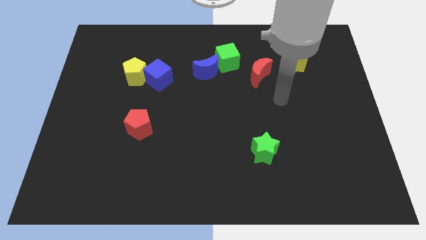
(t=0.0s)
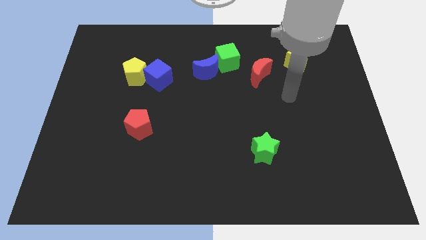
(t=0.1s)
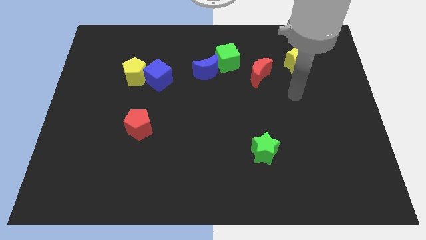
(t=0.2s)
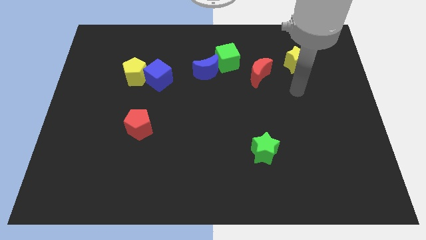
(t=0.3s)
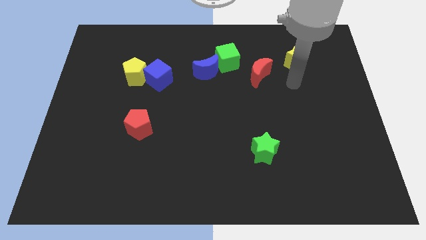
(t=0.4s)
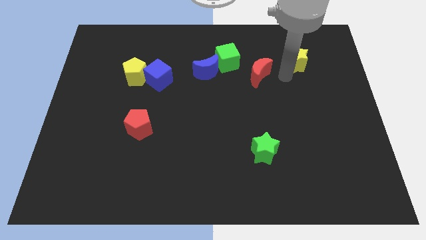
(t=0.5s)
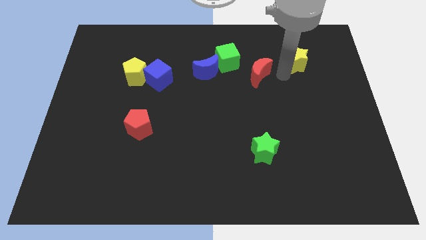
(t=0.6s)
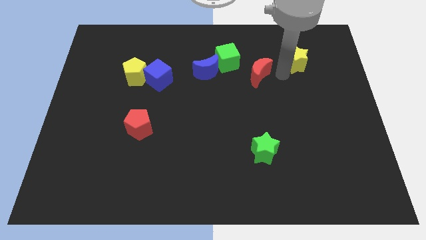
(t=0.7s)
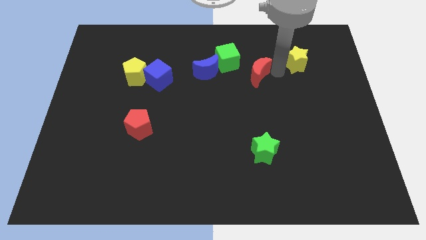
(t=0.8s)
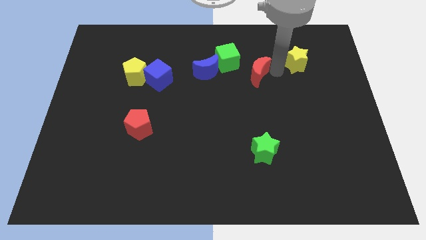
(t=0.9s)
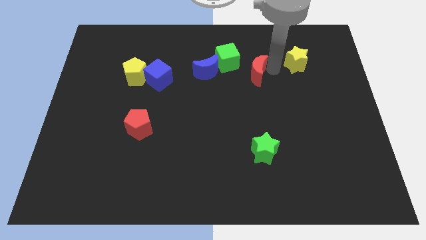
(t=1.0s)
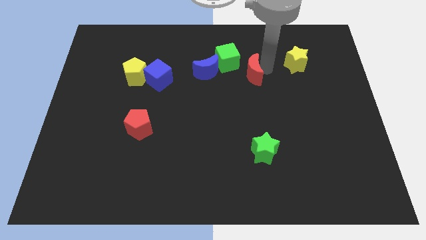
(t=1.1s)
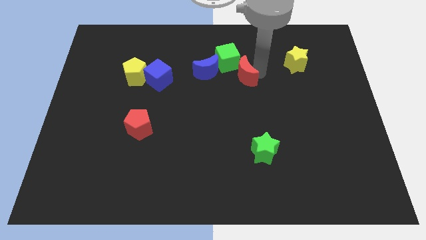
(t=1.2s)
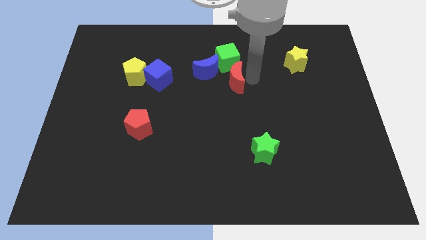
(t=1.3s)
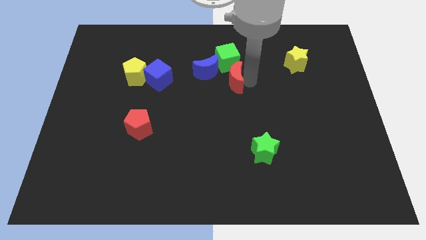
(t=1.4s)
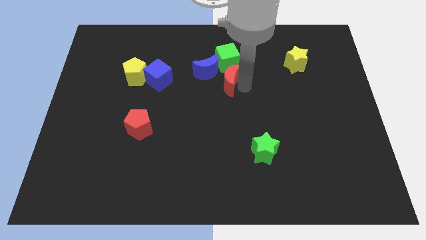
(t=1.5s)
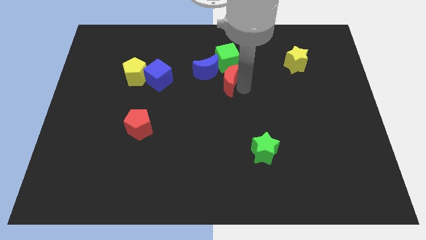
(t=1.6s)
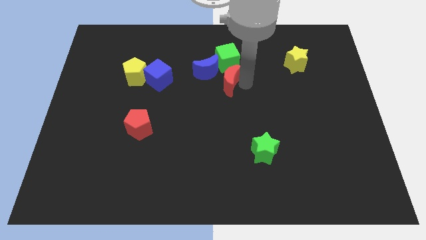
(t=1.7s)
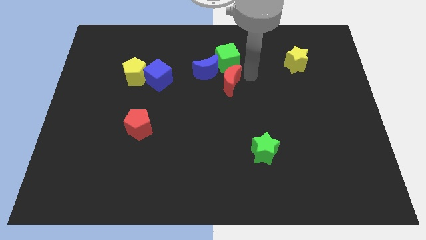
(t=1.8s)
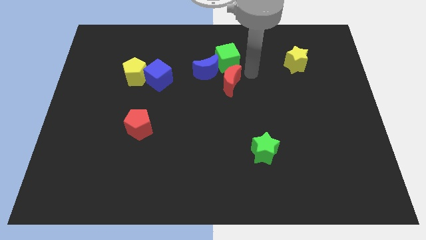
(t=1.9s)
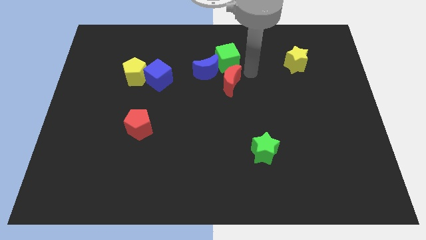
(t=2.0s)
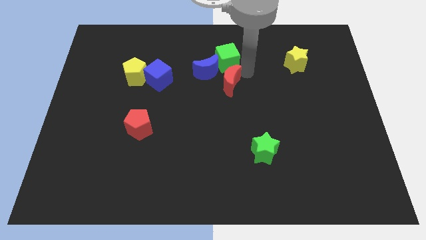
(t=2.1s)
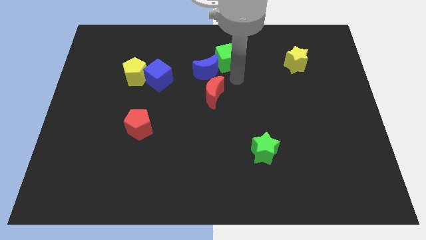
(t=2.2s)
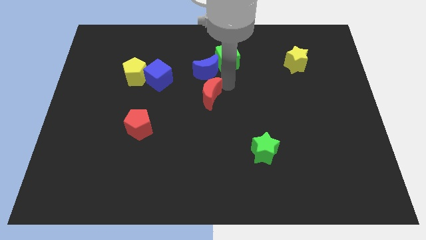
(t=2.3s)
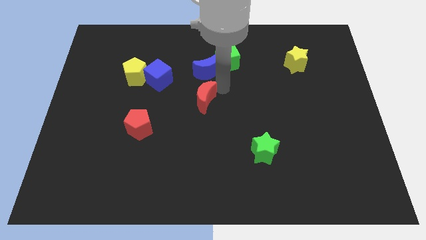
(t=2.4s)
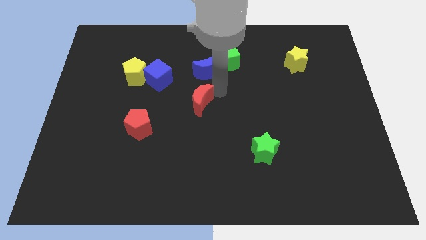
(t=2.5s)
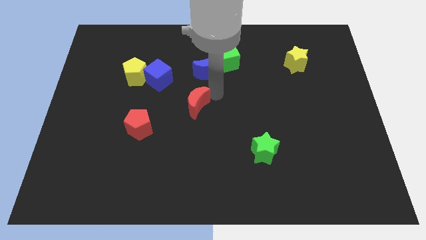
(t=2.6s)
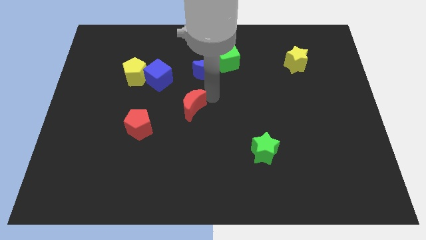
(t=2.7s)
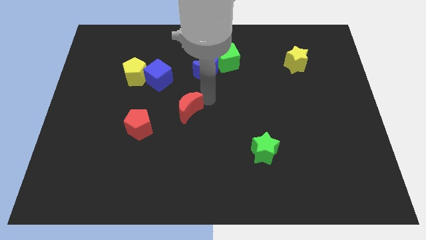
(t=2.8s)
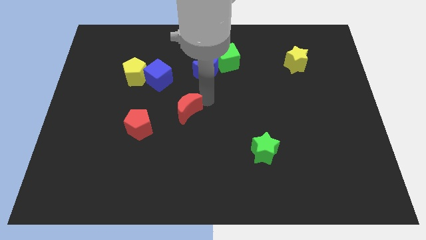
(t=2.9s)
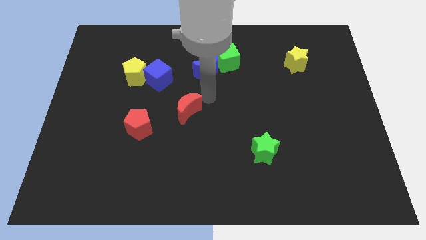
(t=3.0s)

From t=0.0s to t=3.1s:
slide the red moon down diagonal to the red pentagon

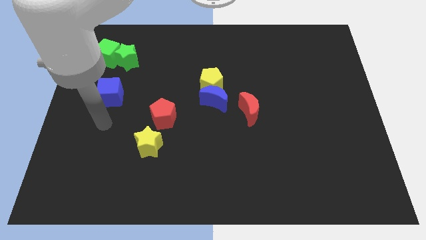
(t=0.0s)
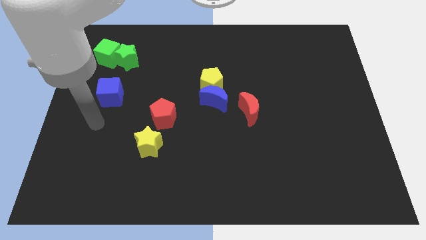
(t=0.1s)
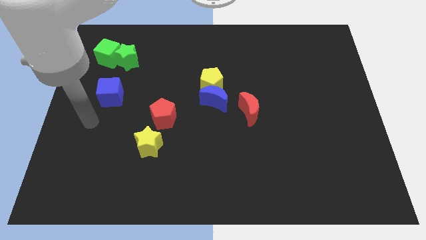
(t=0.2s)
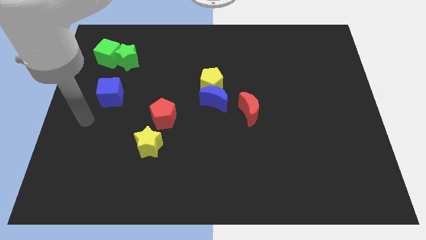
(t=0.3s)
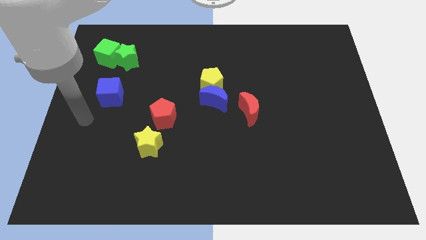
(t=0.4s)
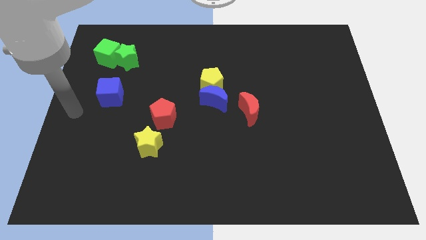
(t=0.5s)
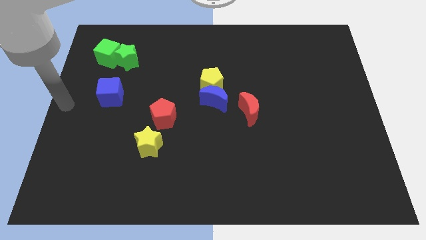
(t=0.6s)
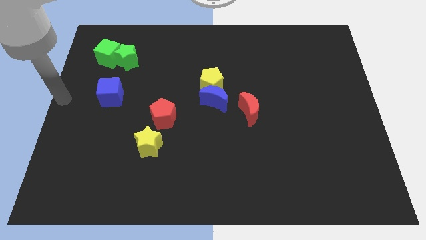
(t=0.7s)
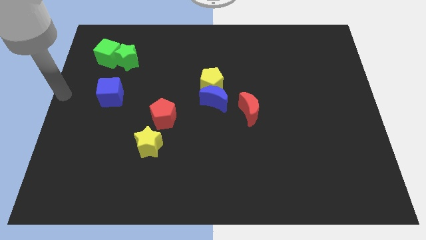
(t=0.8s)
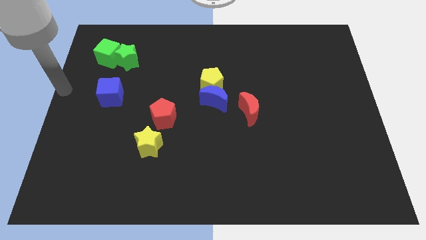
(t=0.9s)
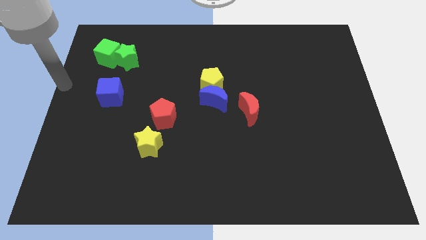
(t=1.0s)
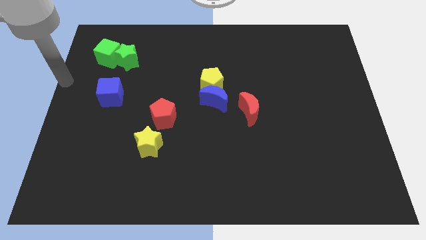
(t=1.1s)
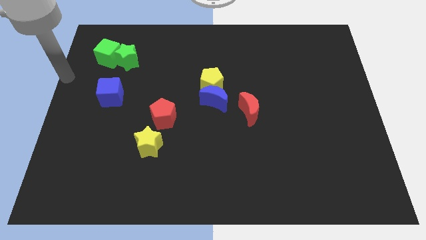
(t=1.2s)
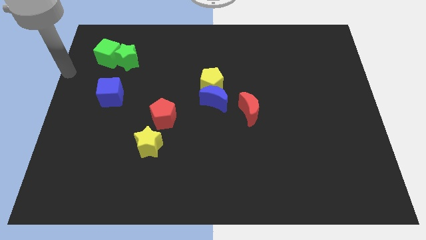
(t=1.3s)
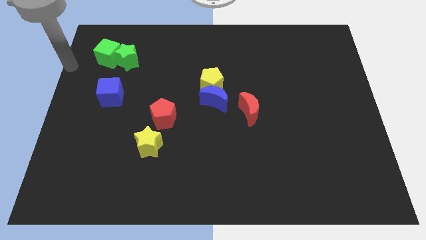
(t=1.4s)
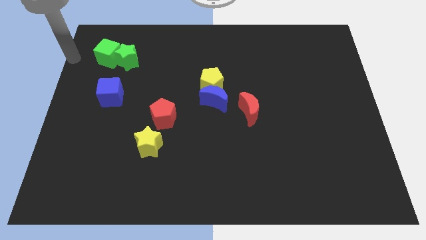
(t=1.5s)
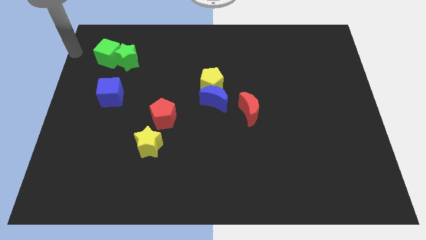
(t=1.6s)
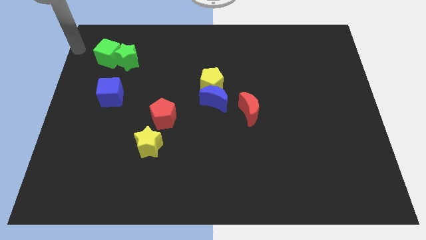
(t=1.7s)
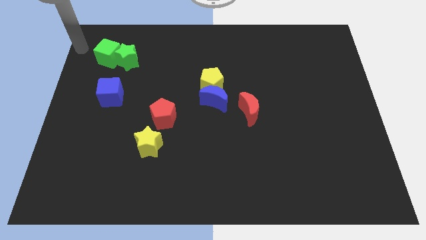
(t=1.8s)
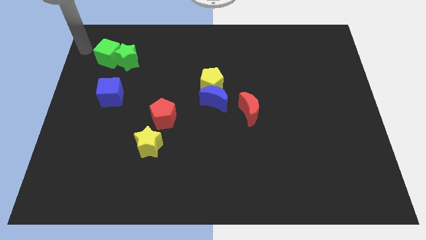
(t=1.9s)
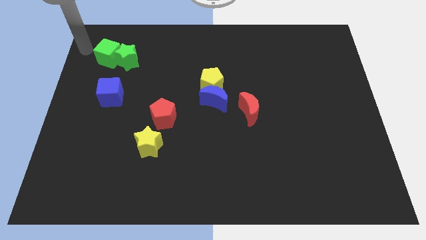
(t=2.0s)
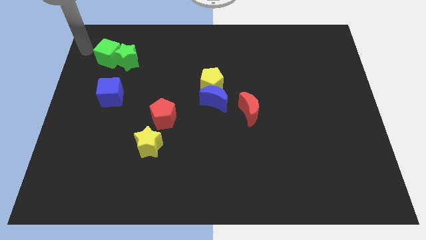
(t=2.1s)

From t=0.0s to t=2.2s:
move your arm to the left of the green cube

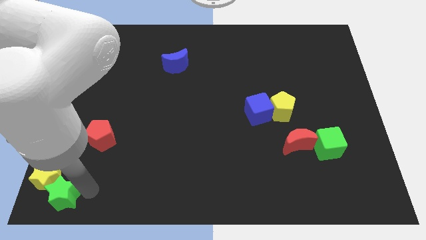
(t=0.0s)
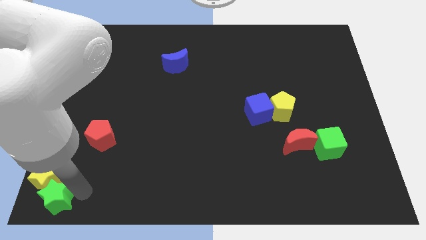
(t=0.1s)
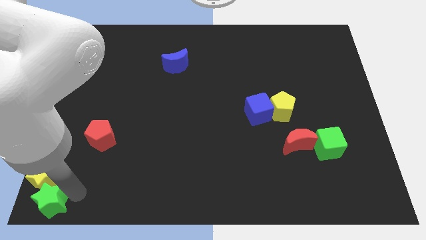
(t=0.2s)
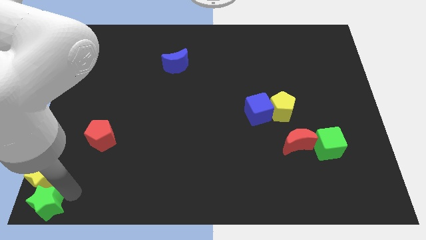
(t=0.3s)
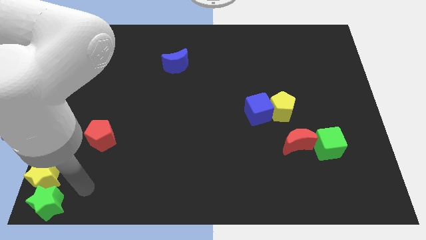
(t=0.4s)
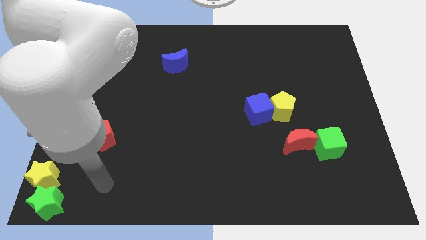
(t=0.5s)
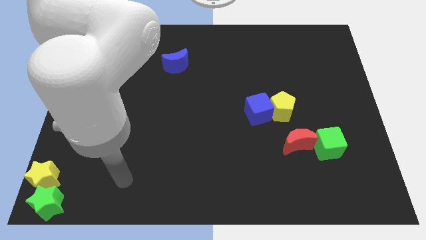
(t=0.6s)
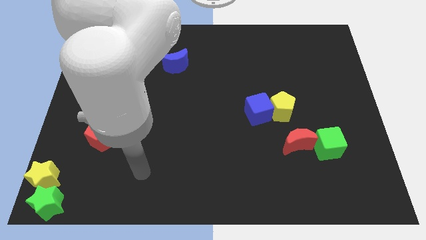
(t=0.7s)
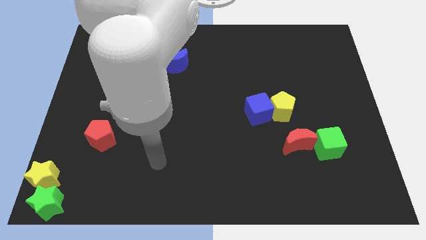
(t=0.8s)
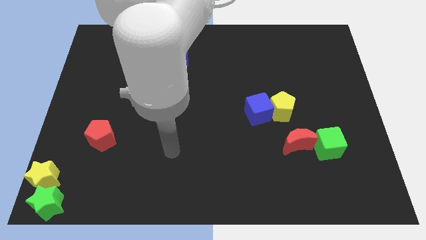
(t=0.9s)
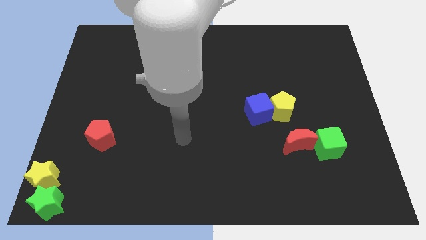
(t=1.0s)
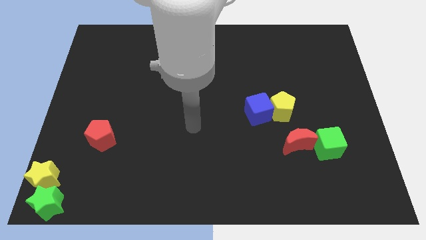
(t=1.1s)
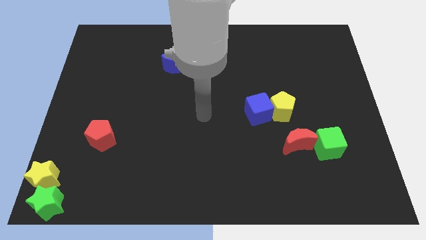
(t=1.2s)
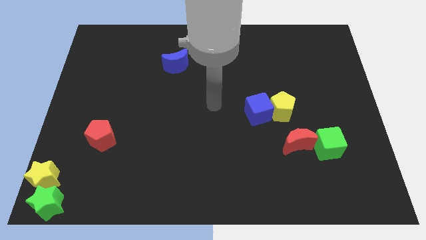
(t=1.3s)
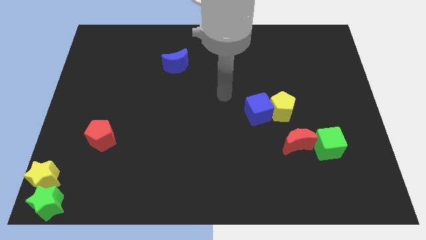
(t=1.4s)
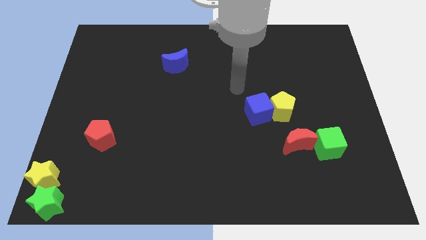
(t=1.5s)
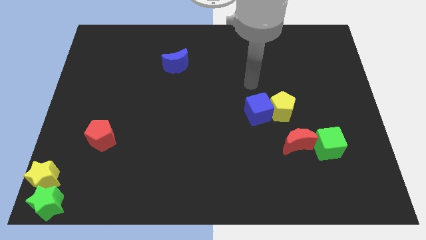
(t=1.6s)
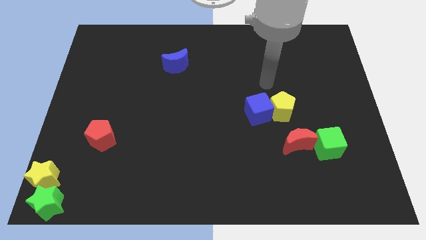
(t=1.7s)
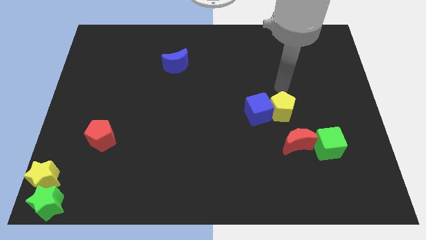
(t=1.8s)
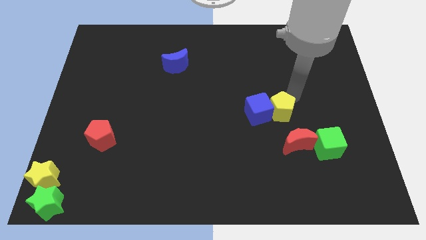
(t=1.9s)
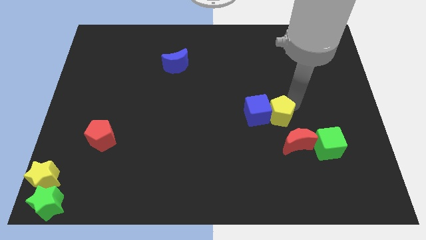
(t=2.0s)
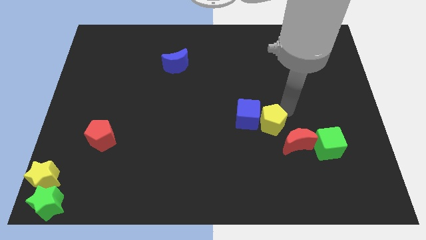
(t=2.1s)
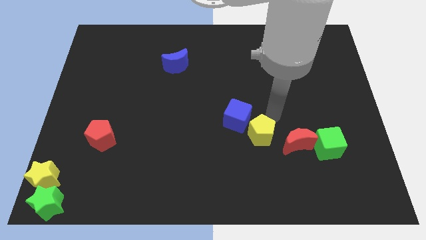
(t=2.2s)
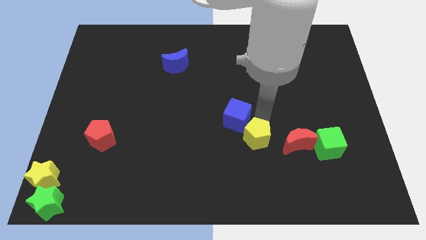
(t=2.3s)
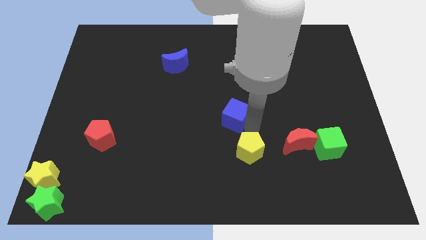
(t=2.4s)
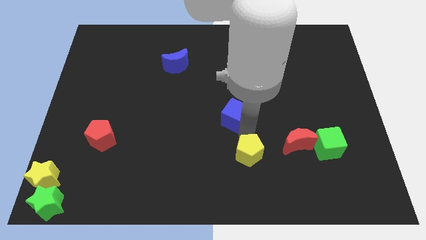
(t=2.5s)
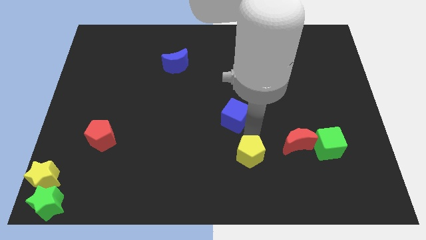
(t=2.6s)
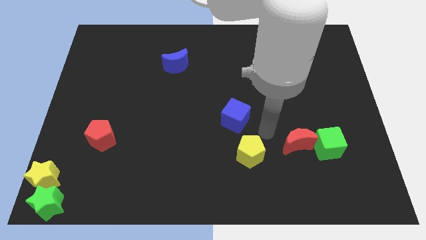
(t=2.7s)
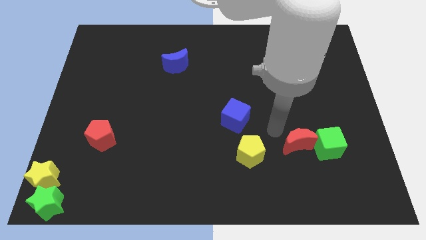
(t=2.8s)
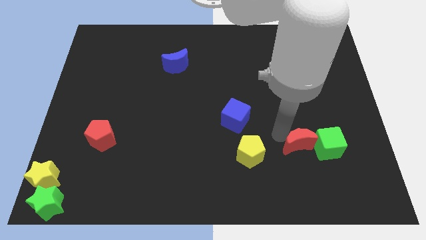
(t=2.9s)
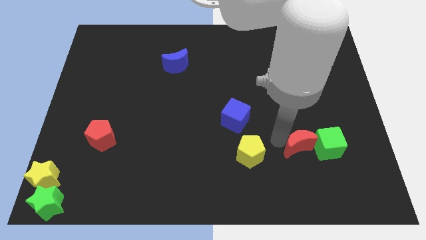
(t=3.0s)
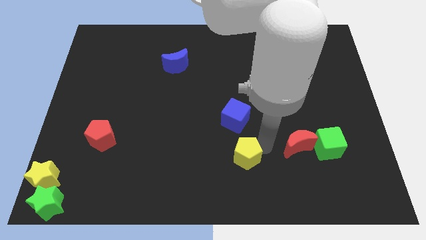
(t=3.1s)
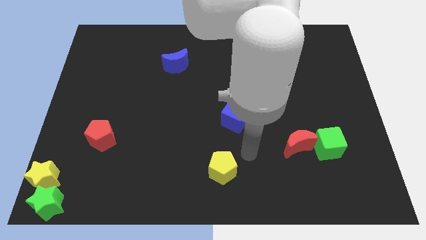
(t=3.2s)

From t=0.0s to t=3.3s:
place yellow pentagon to the left of red moon

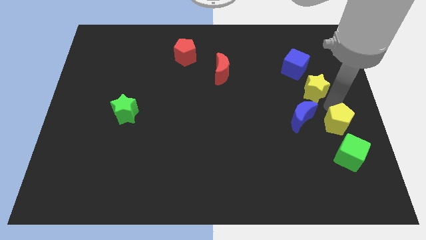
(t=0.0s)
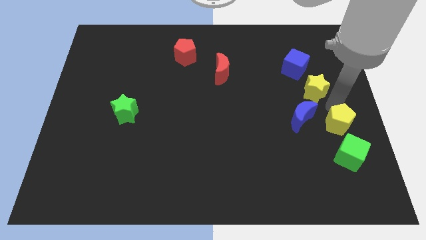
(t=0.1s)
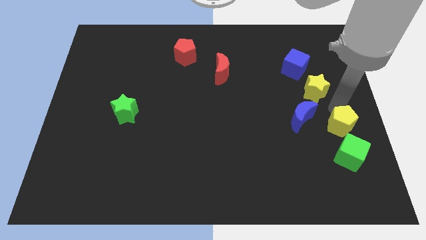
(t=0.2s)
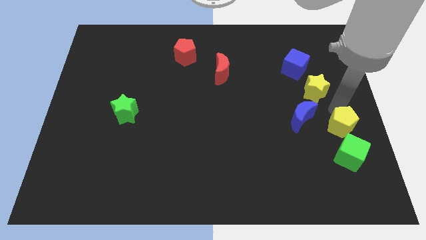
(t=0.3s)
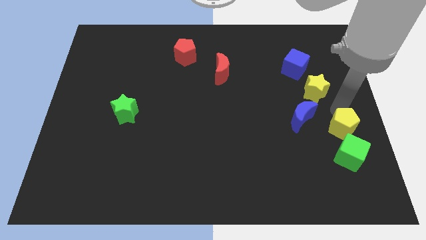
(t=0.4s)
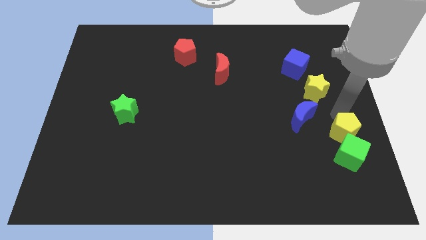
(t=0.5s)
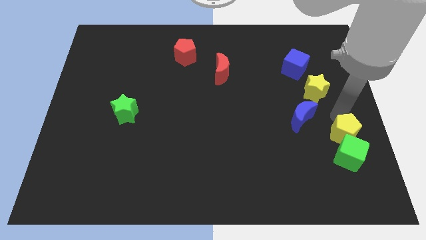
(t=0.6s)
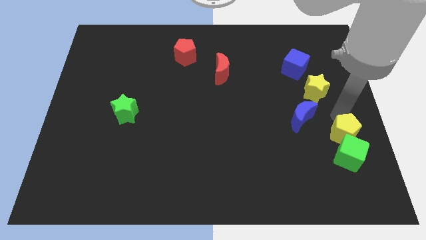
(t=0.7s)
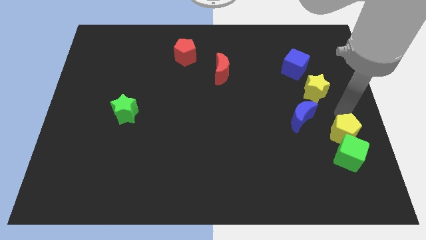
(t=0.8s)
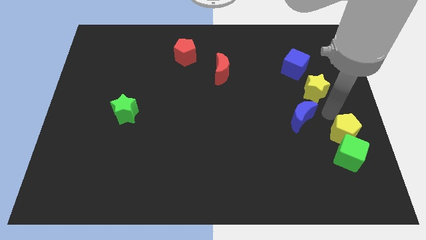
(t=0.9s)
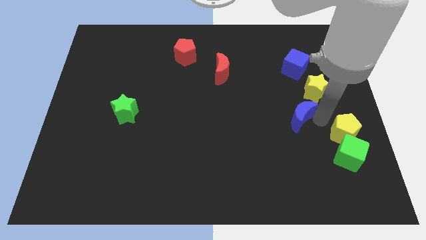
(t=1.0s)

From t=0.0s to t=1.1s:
move yellow pentagon closer to green cube
